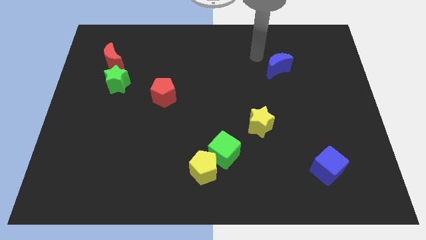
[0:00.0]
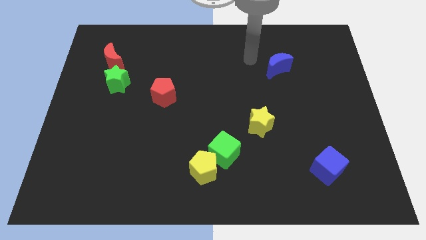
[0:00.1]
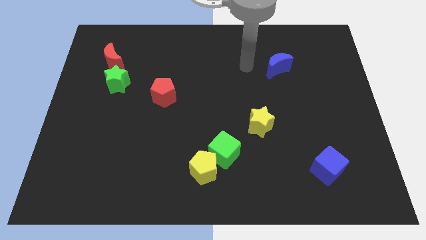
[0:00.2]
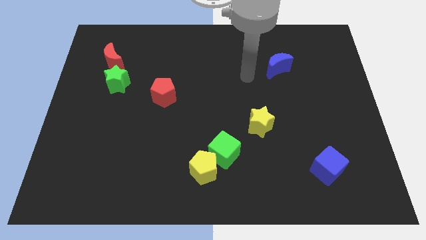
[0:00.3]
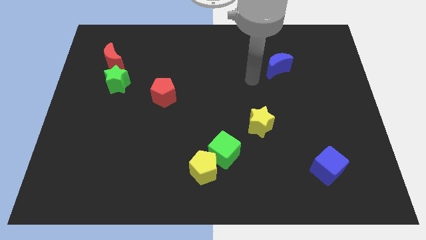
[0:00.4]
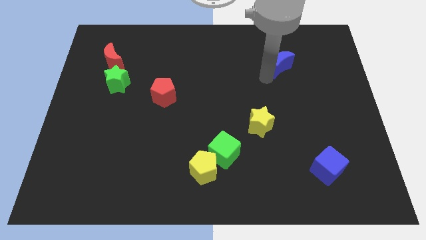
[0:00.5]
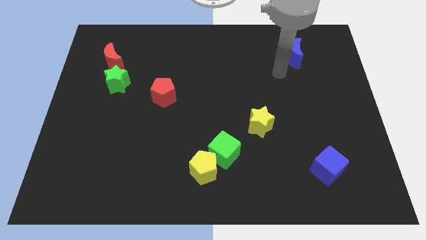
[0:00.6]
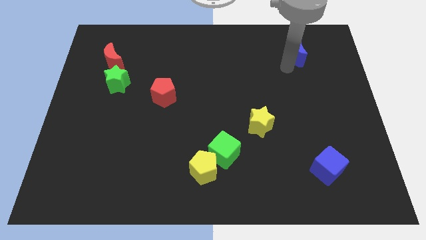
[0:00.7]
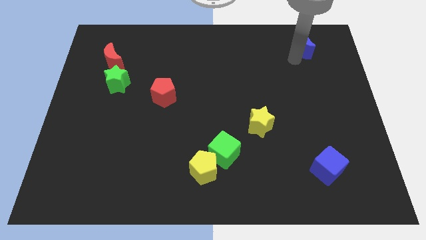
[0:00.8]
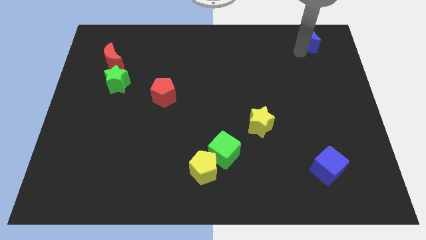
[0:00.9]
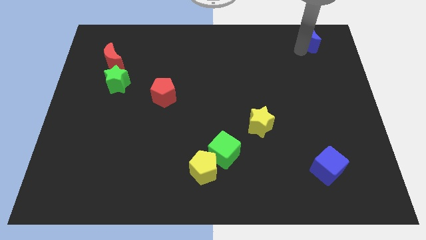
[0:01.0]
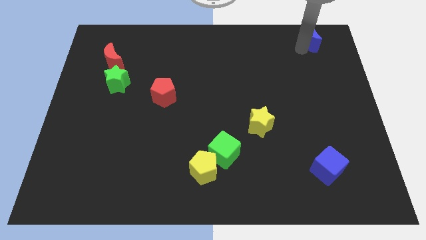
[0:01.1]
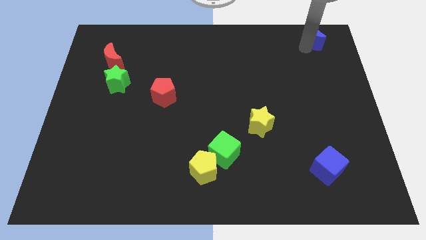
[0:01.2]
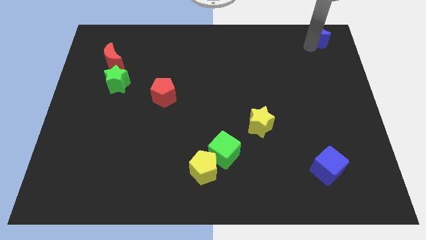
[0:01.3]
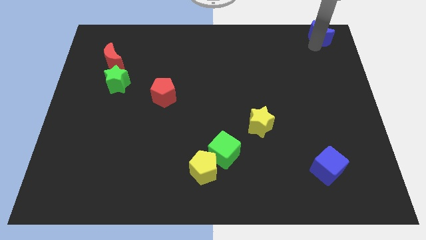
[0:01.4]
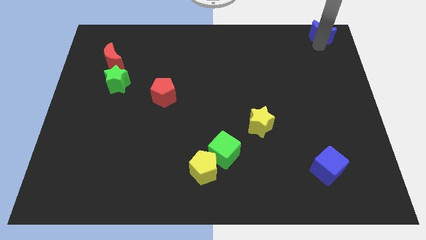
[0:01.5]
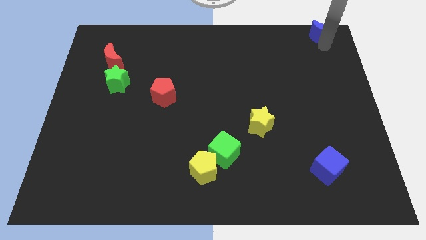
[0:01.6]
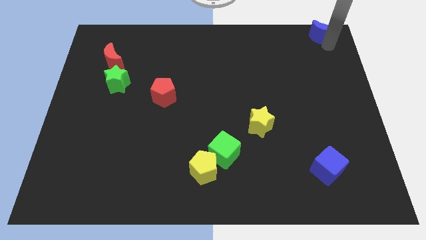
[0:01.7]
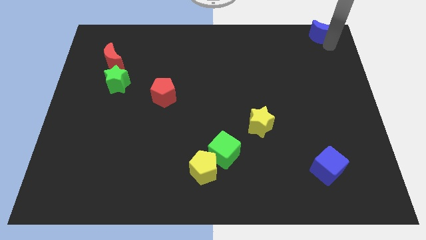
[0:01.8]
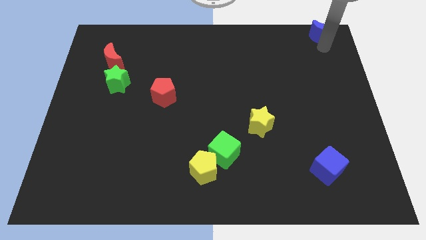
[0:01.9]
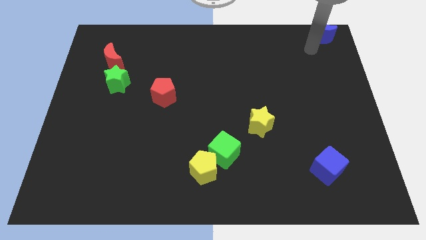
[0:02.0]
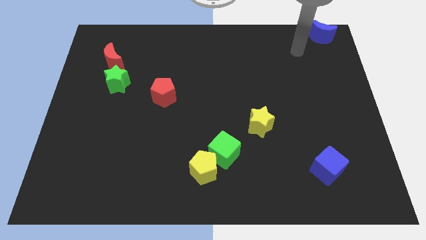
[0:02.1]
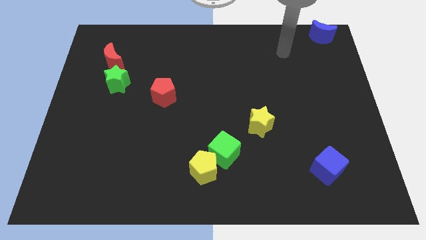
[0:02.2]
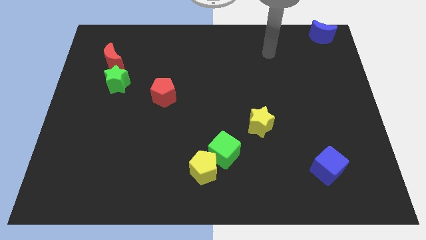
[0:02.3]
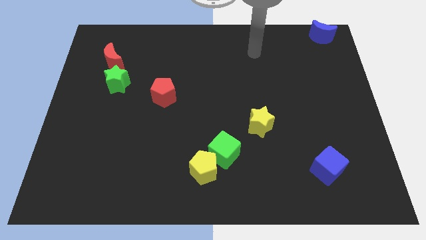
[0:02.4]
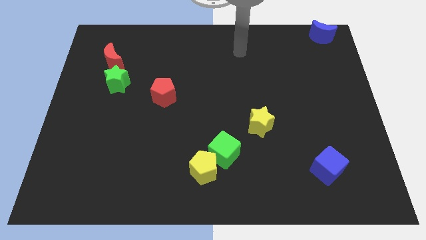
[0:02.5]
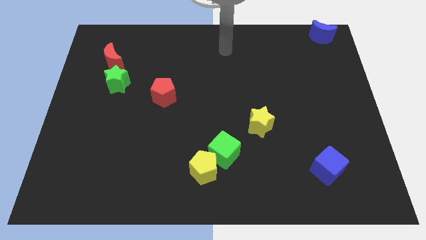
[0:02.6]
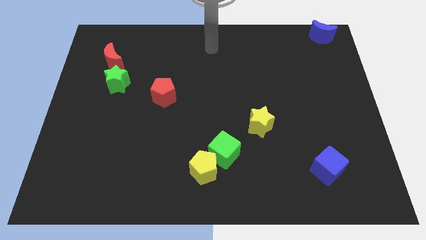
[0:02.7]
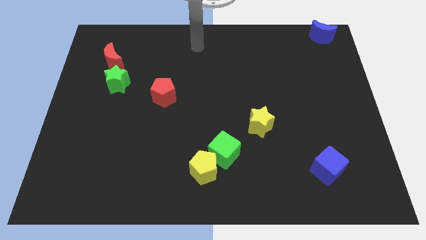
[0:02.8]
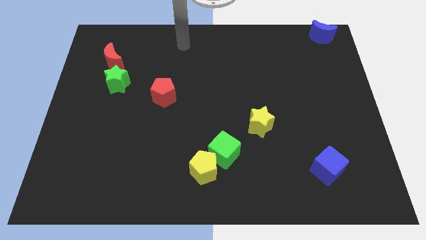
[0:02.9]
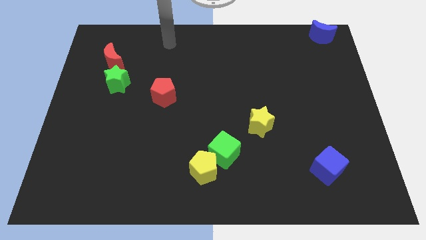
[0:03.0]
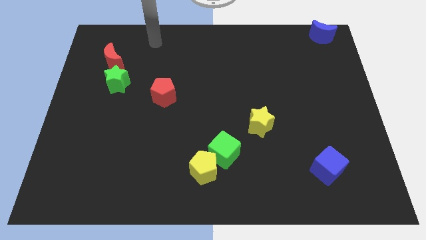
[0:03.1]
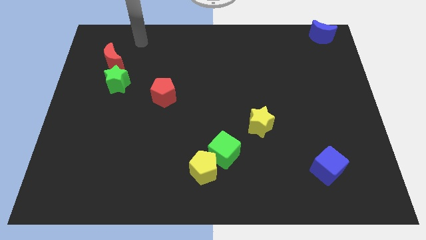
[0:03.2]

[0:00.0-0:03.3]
place the blue moon to the top right side of the board

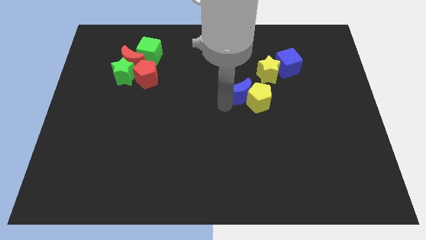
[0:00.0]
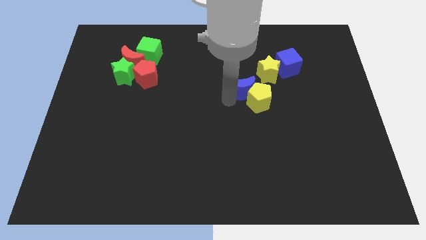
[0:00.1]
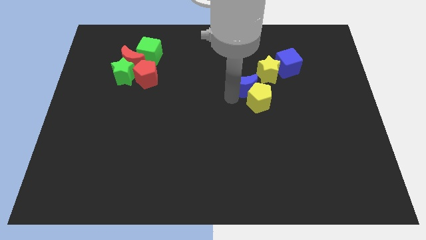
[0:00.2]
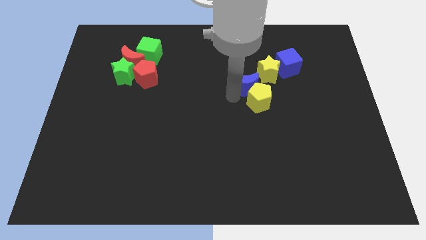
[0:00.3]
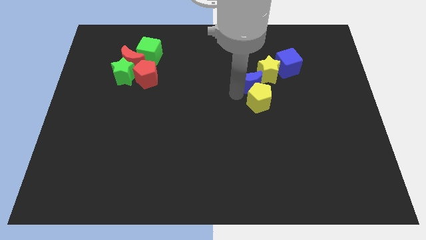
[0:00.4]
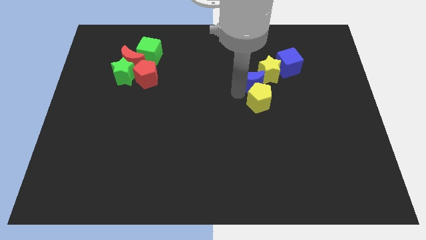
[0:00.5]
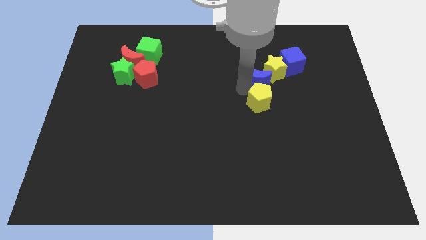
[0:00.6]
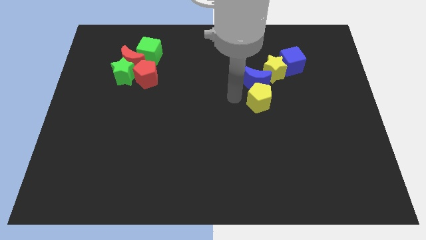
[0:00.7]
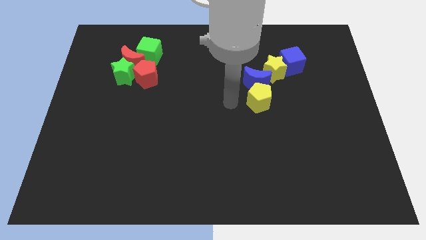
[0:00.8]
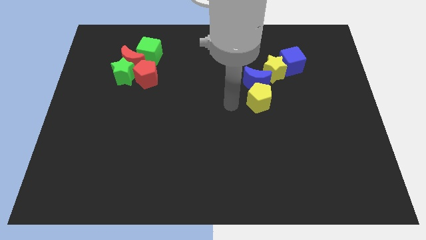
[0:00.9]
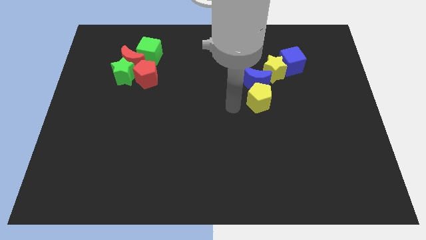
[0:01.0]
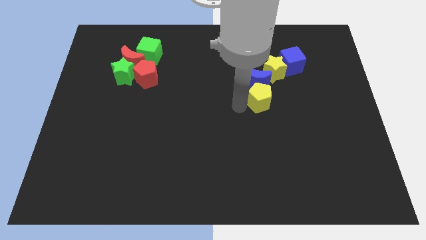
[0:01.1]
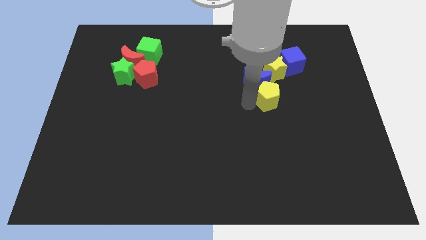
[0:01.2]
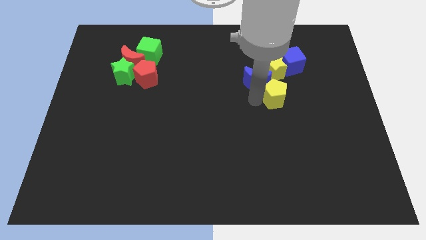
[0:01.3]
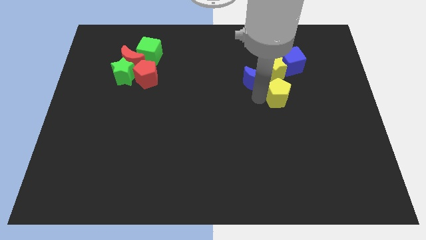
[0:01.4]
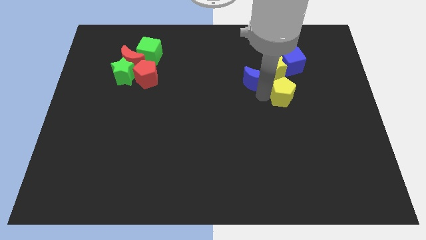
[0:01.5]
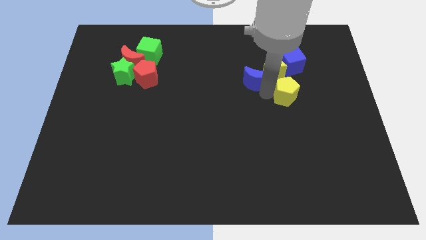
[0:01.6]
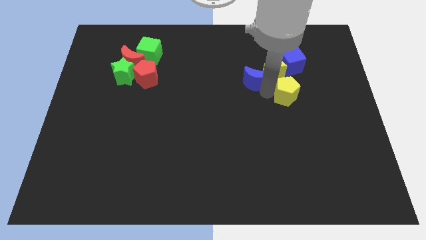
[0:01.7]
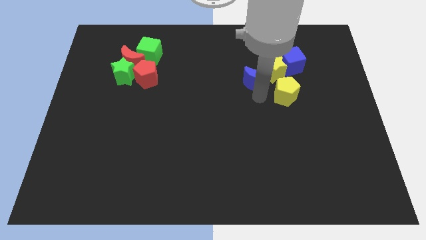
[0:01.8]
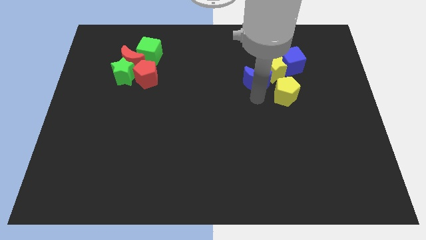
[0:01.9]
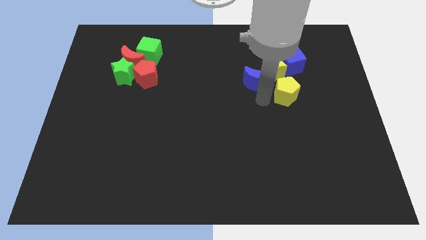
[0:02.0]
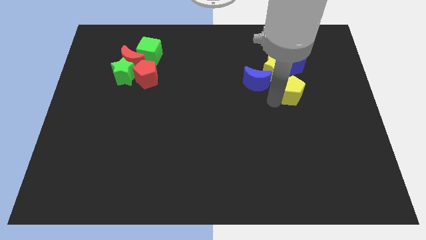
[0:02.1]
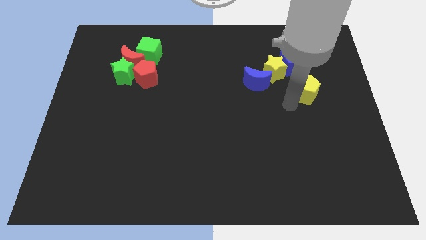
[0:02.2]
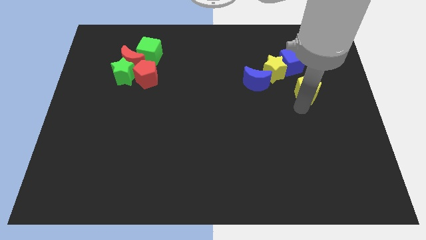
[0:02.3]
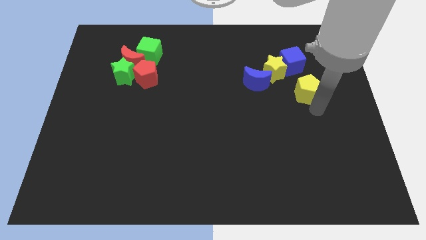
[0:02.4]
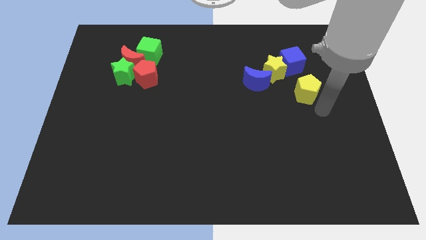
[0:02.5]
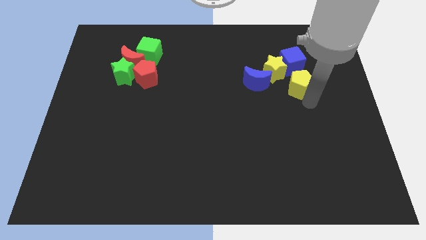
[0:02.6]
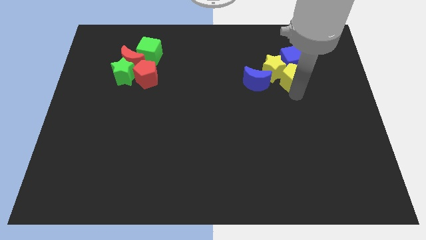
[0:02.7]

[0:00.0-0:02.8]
push the blue crescent and yellow pentagon towards the top right side of the board

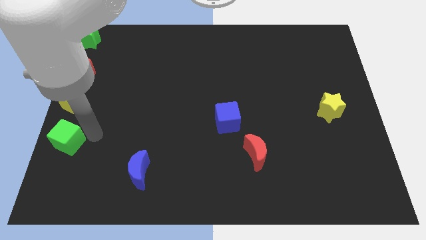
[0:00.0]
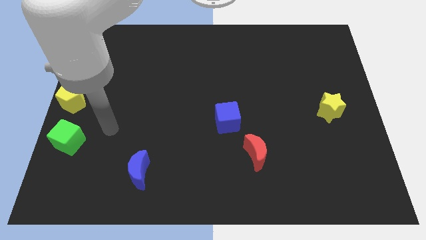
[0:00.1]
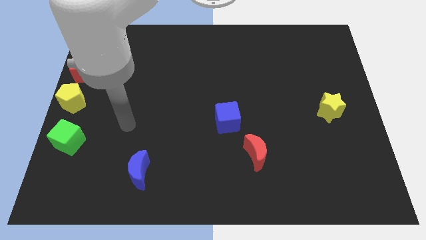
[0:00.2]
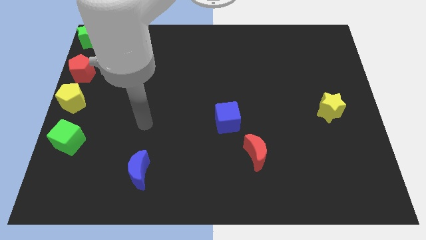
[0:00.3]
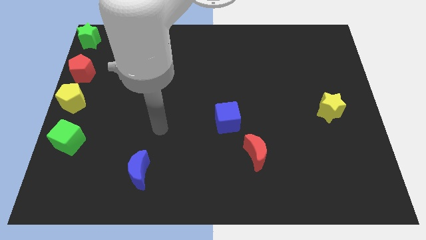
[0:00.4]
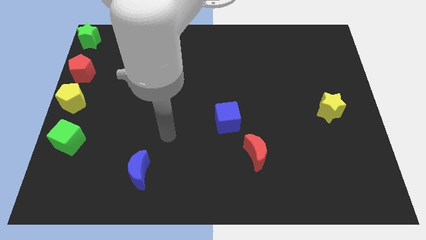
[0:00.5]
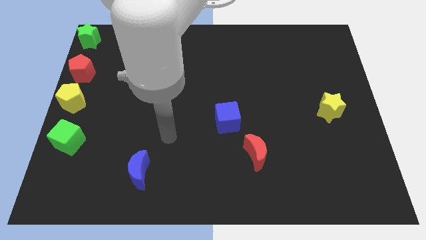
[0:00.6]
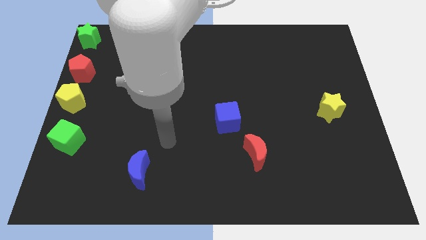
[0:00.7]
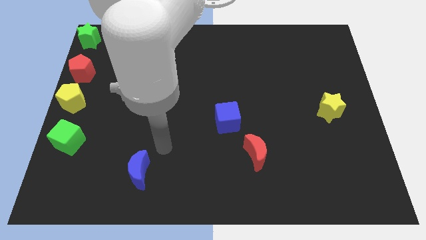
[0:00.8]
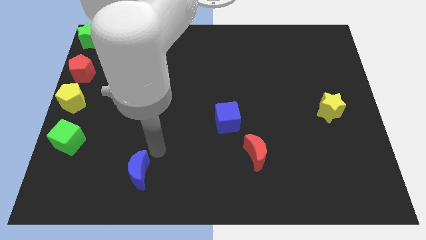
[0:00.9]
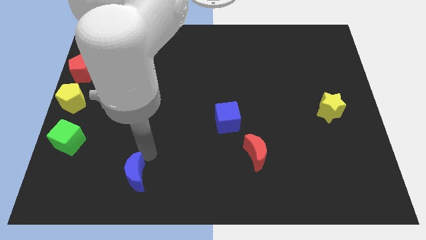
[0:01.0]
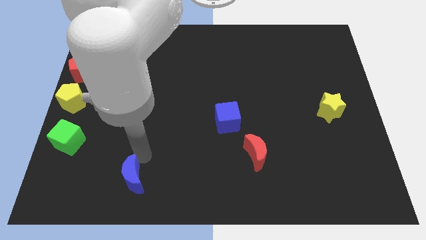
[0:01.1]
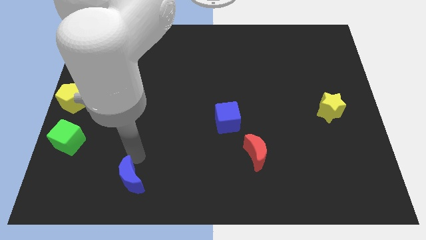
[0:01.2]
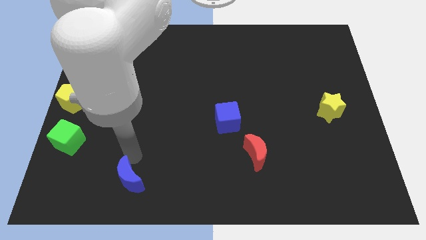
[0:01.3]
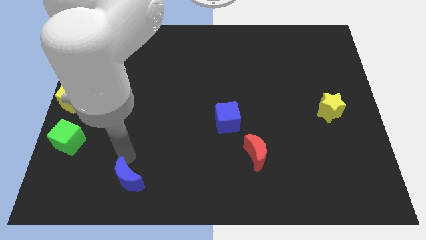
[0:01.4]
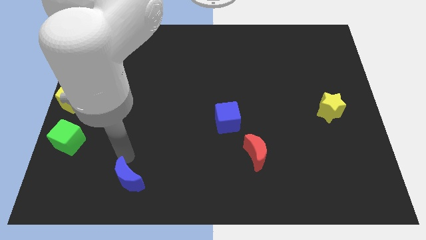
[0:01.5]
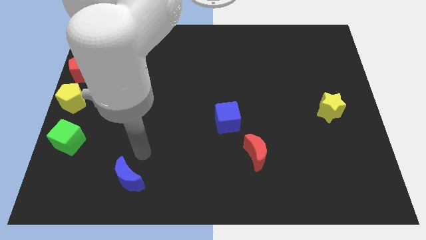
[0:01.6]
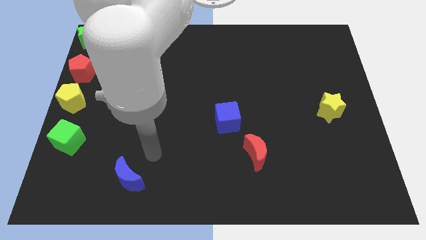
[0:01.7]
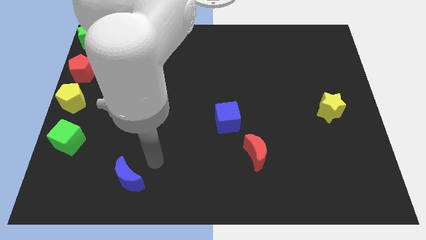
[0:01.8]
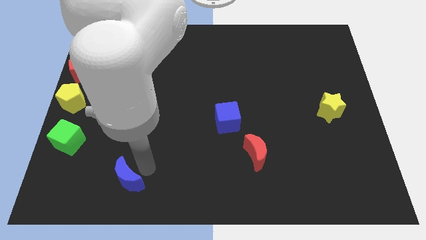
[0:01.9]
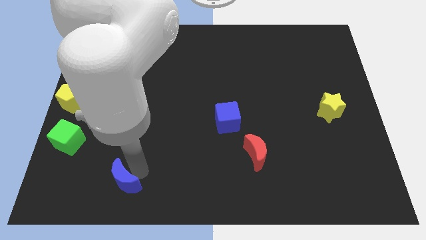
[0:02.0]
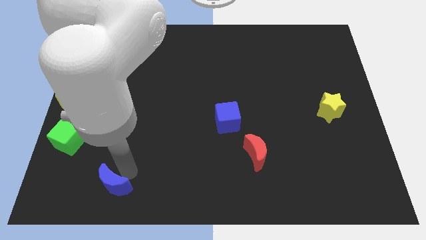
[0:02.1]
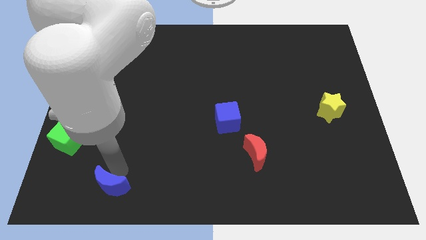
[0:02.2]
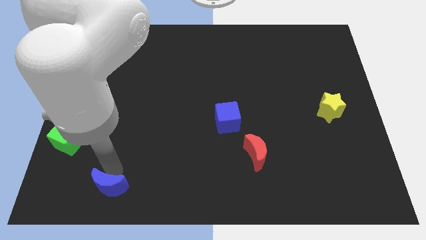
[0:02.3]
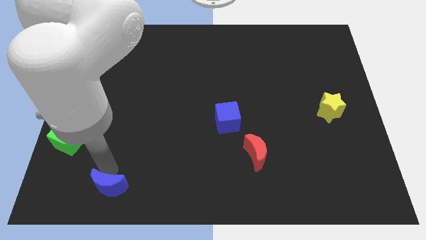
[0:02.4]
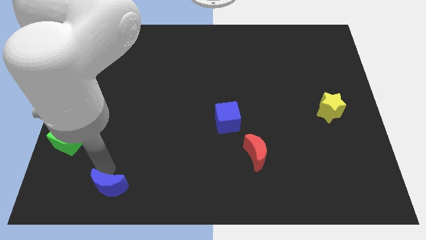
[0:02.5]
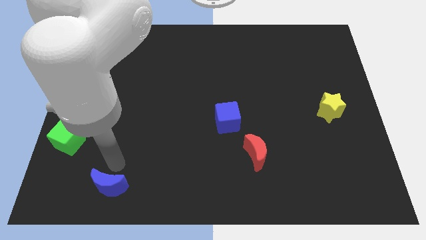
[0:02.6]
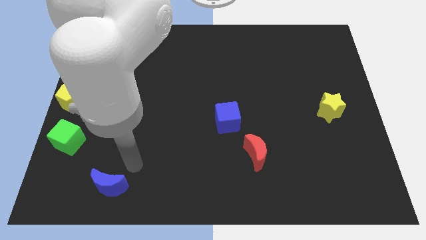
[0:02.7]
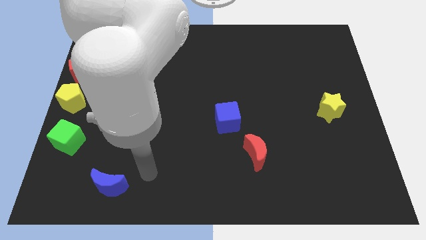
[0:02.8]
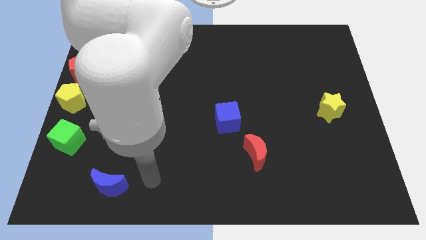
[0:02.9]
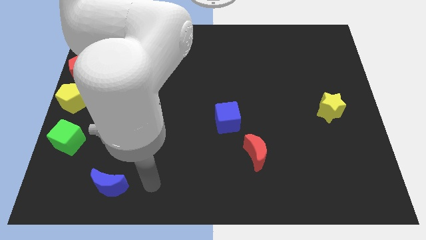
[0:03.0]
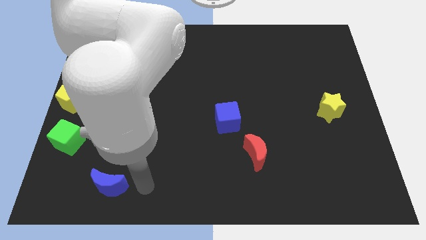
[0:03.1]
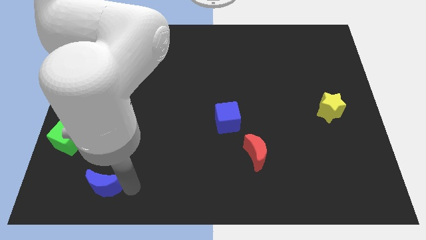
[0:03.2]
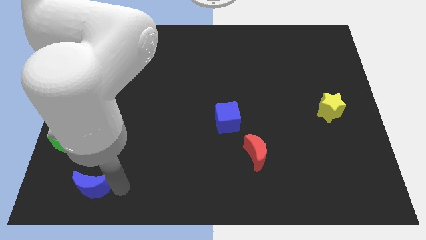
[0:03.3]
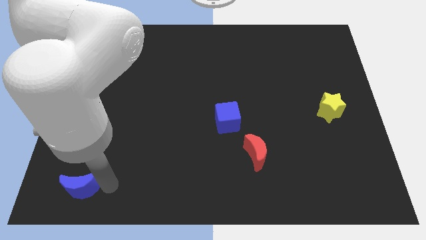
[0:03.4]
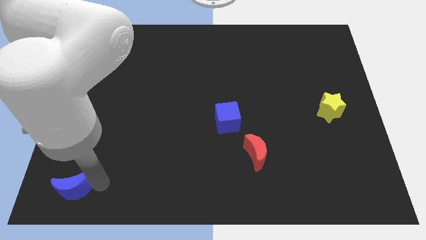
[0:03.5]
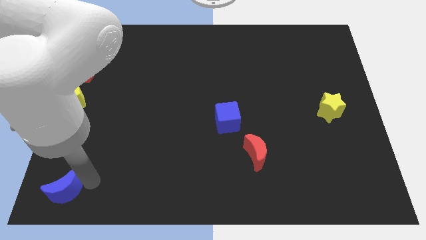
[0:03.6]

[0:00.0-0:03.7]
push the blue crescent towards the bottom left side of the board
